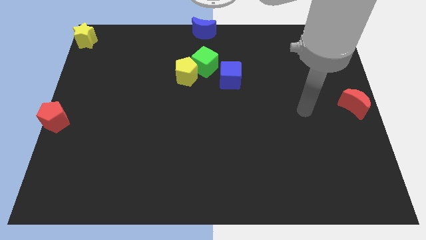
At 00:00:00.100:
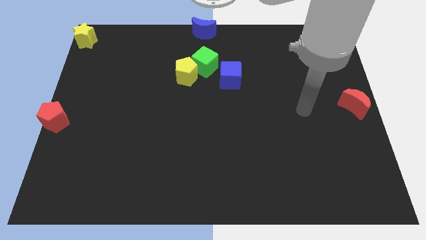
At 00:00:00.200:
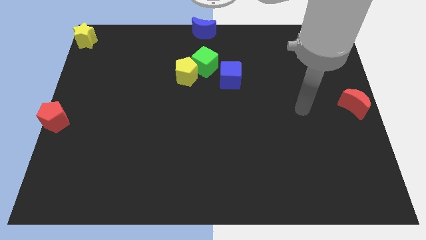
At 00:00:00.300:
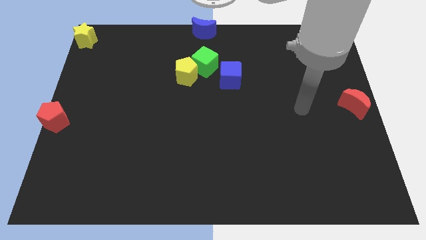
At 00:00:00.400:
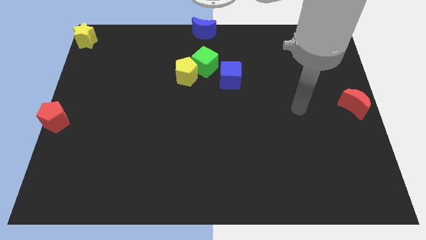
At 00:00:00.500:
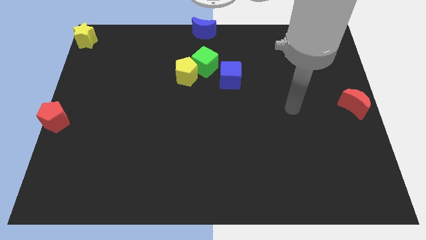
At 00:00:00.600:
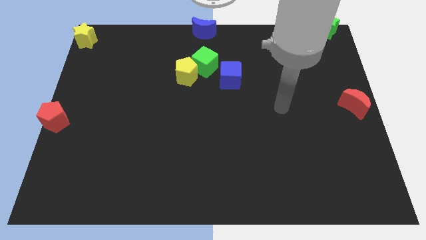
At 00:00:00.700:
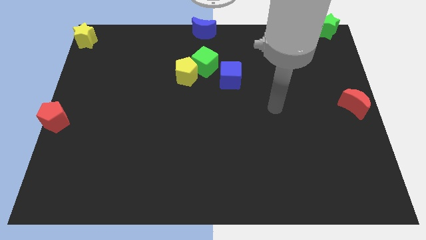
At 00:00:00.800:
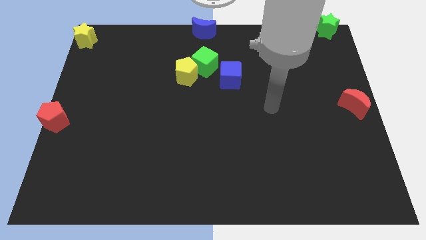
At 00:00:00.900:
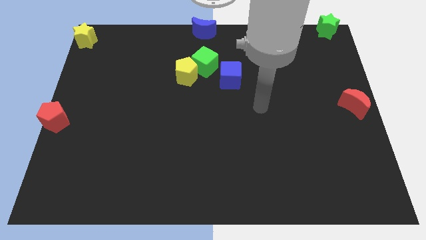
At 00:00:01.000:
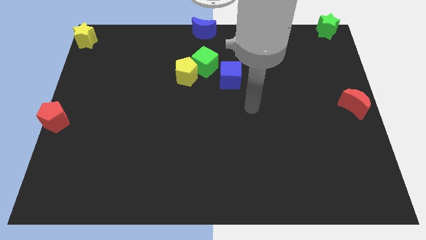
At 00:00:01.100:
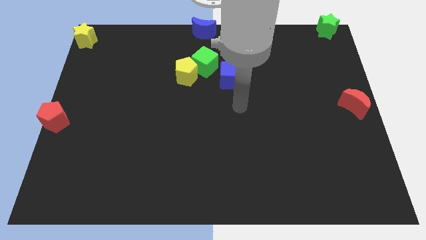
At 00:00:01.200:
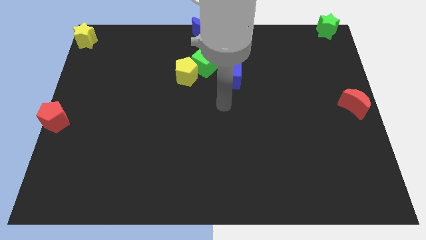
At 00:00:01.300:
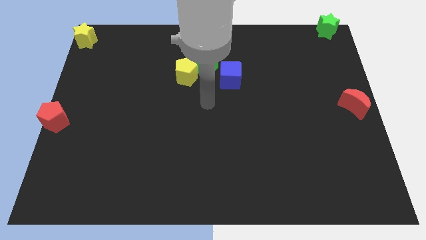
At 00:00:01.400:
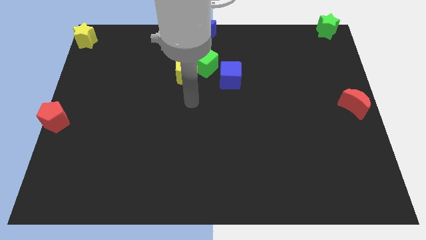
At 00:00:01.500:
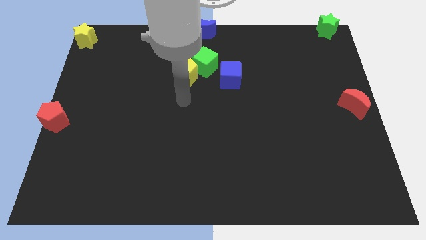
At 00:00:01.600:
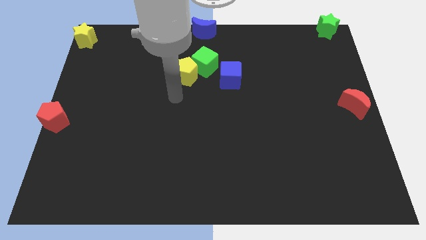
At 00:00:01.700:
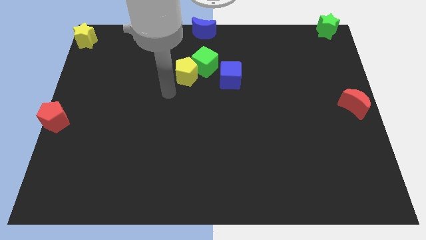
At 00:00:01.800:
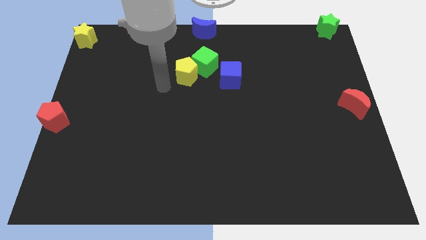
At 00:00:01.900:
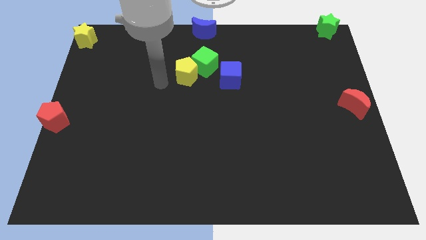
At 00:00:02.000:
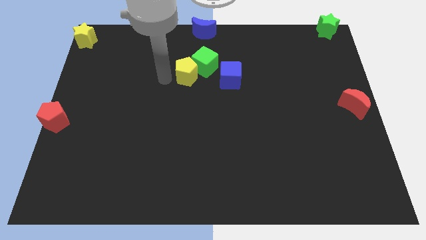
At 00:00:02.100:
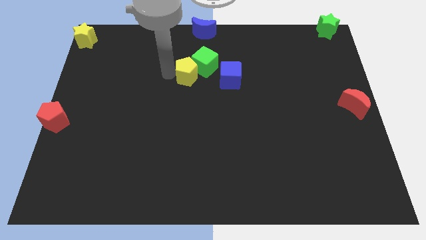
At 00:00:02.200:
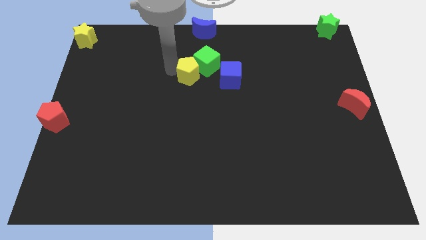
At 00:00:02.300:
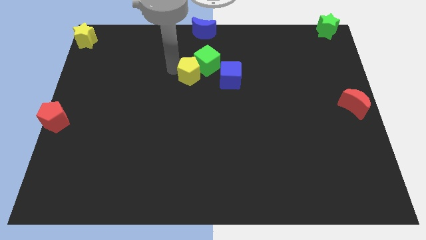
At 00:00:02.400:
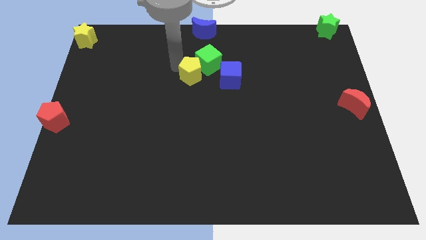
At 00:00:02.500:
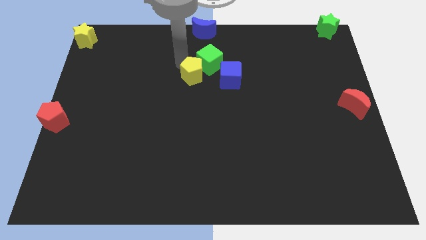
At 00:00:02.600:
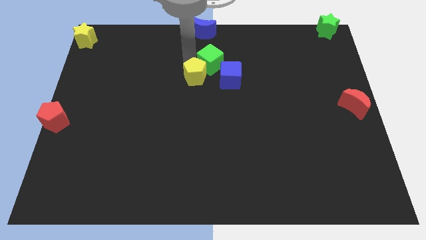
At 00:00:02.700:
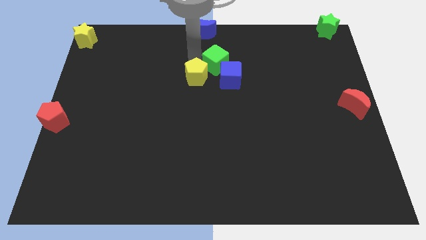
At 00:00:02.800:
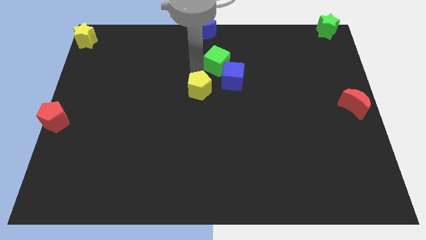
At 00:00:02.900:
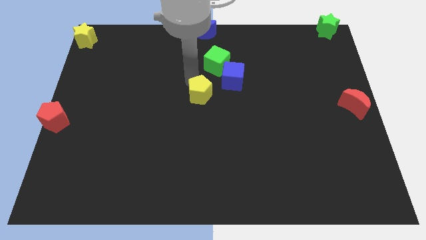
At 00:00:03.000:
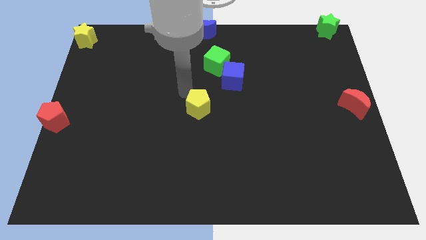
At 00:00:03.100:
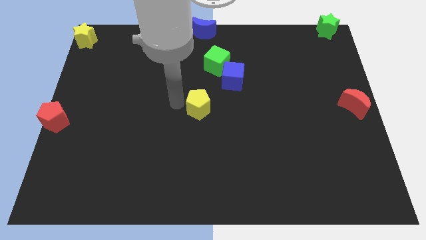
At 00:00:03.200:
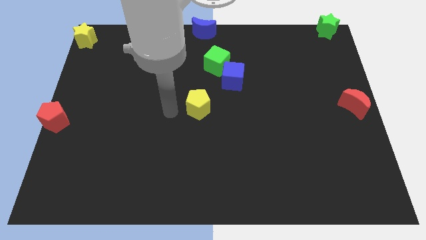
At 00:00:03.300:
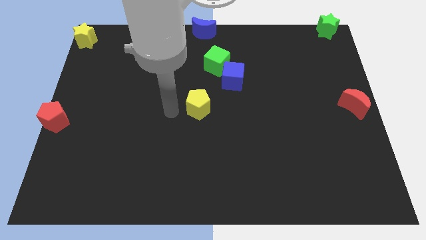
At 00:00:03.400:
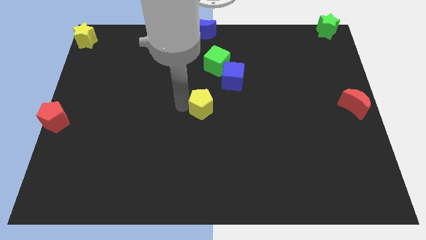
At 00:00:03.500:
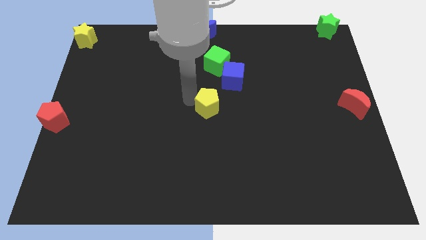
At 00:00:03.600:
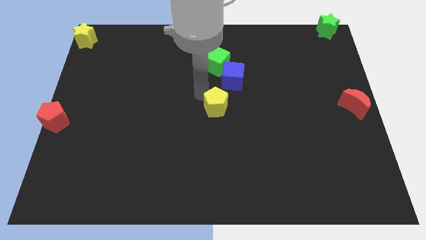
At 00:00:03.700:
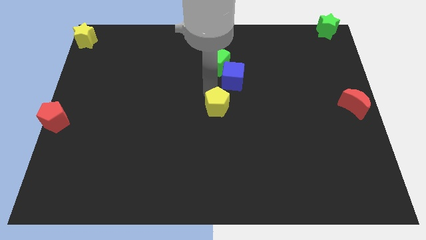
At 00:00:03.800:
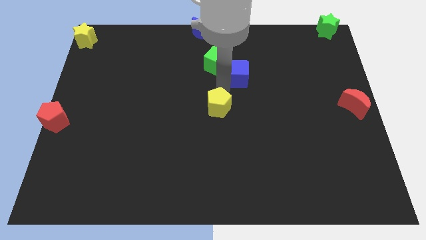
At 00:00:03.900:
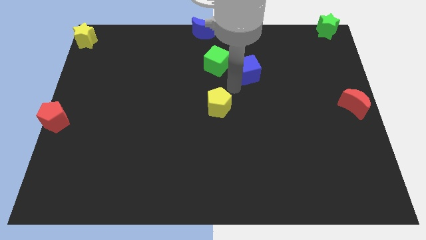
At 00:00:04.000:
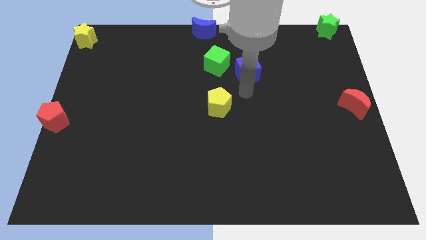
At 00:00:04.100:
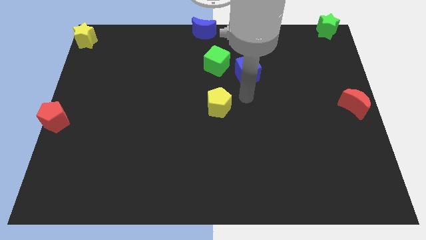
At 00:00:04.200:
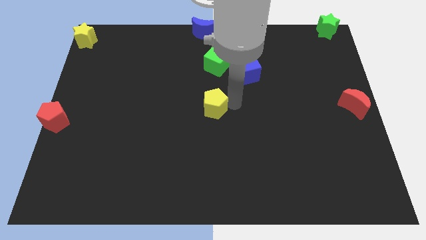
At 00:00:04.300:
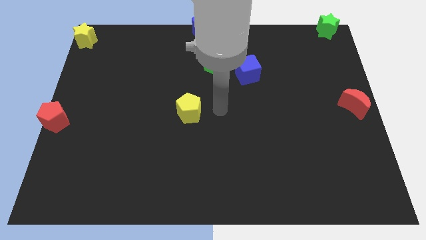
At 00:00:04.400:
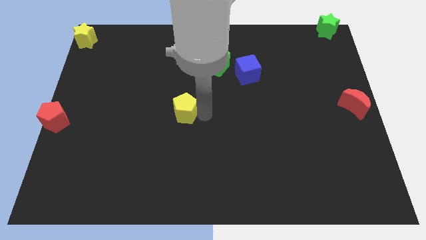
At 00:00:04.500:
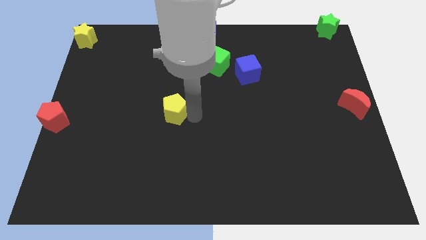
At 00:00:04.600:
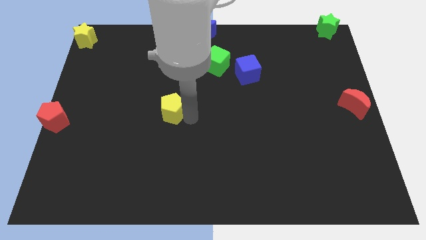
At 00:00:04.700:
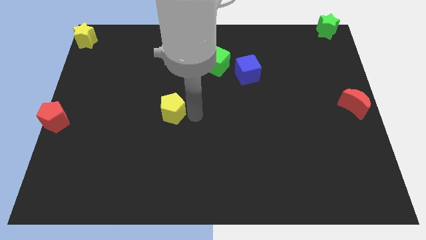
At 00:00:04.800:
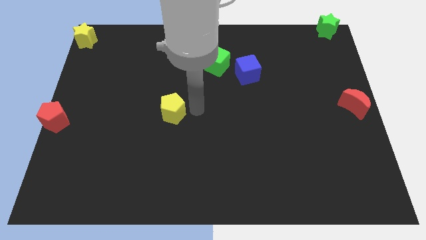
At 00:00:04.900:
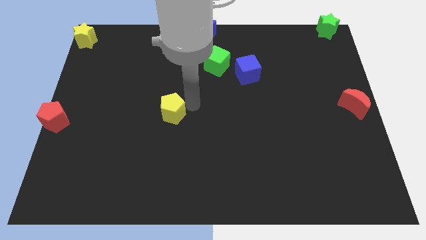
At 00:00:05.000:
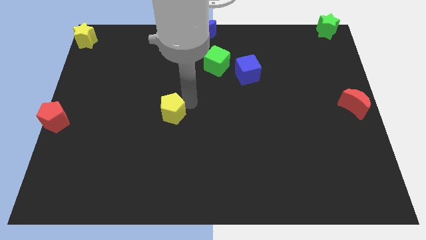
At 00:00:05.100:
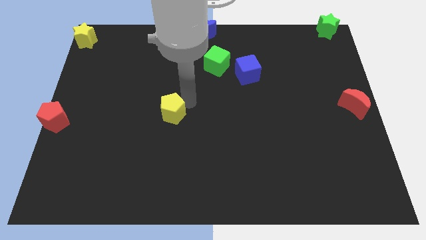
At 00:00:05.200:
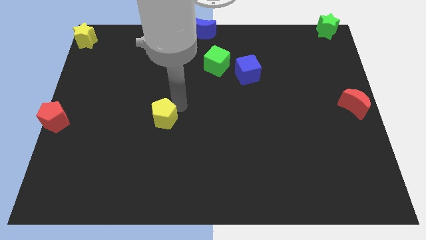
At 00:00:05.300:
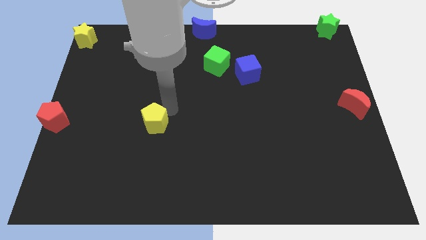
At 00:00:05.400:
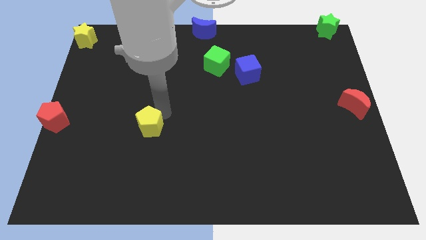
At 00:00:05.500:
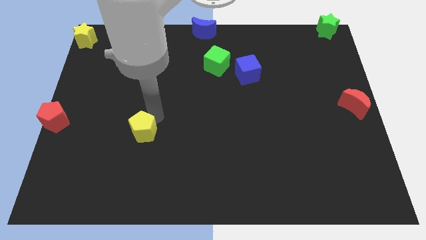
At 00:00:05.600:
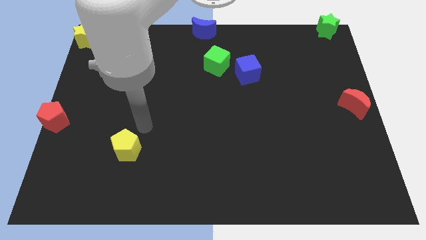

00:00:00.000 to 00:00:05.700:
drag the yellow pentagon diagonal to green cube

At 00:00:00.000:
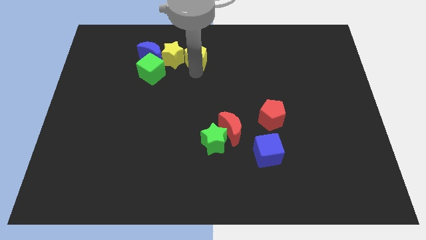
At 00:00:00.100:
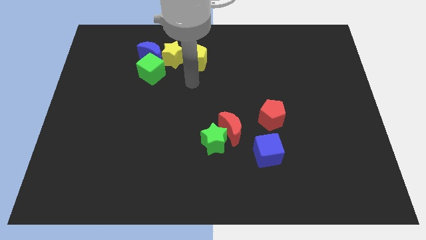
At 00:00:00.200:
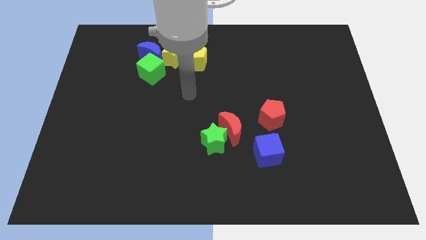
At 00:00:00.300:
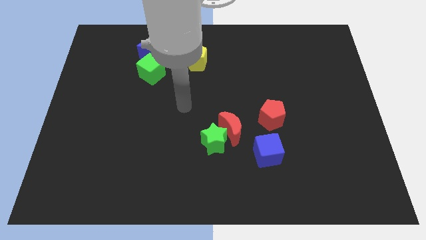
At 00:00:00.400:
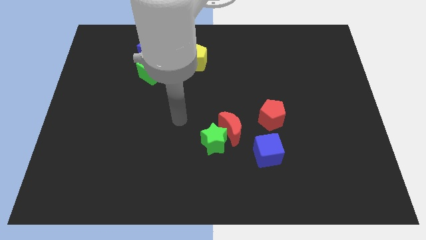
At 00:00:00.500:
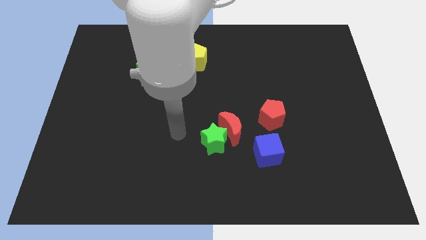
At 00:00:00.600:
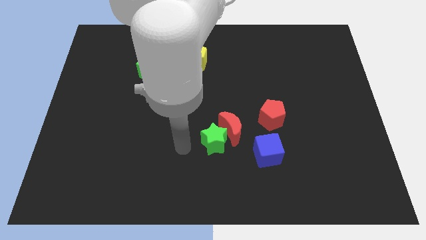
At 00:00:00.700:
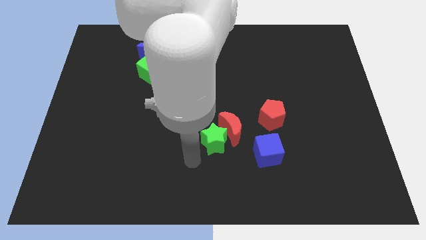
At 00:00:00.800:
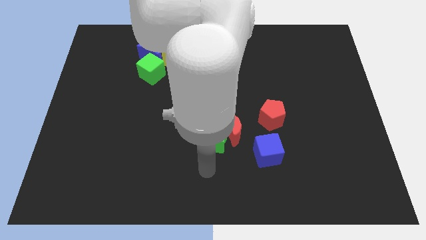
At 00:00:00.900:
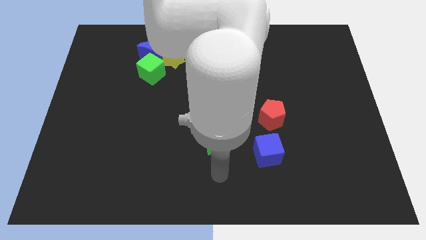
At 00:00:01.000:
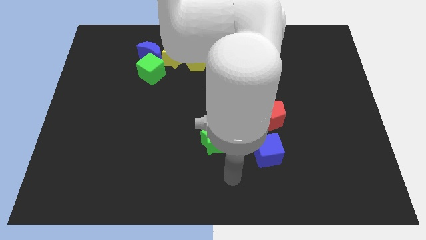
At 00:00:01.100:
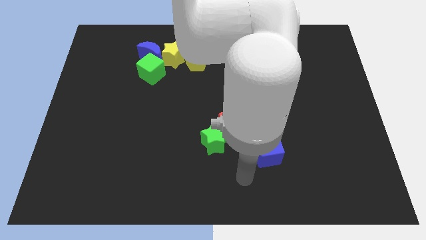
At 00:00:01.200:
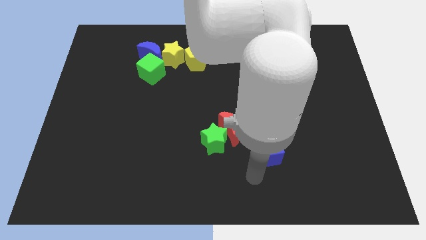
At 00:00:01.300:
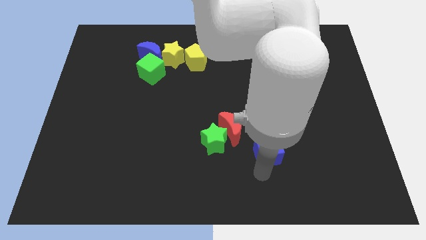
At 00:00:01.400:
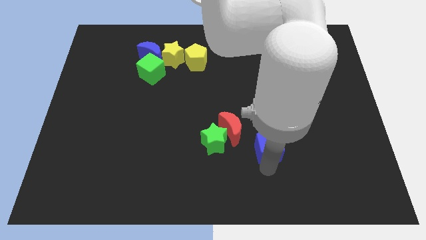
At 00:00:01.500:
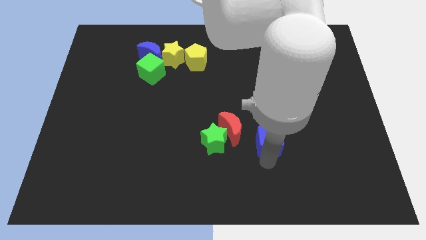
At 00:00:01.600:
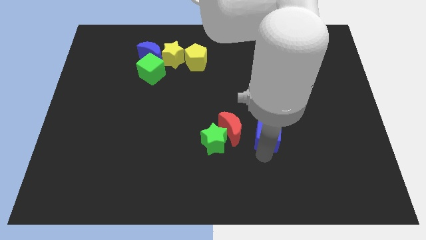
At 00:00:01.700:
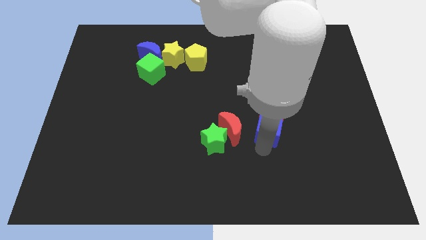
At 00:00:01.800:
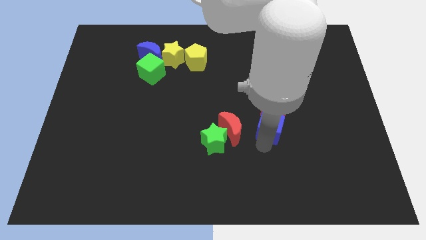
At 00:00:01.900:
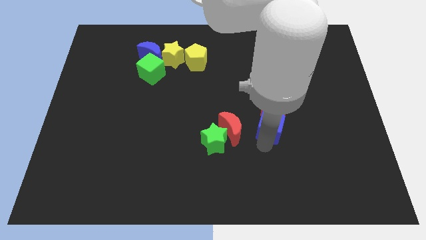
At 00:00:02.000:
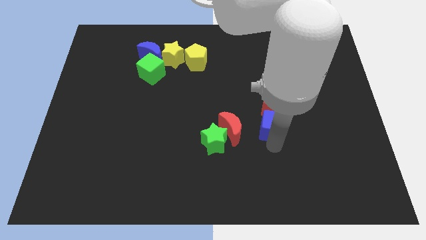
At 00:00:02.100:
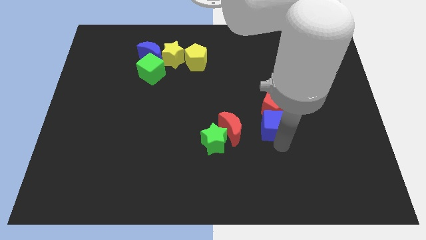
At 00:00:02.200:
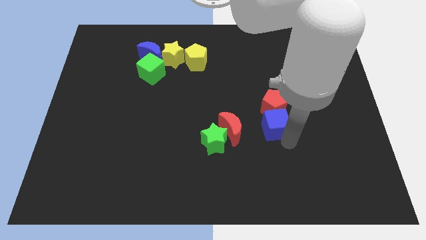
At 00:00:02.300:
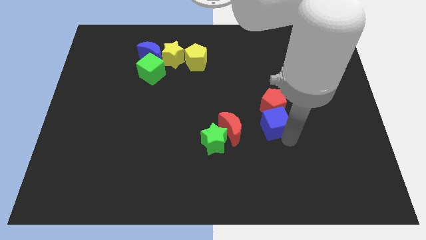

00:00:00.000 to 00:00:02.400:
move the blue cube to the bottom of the red pentagon

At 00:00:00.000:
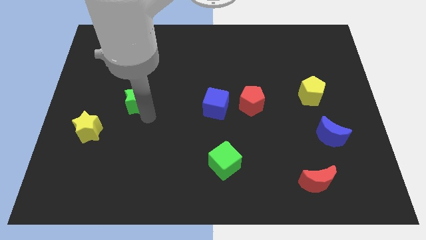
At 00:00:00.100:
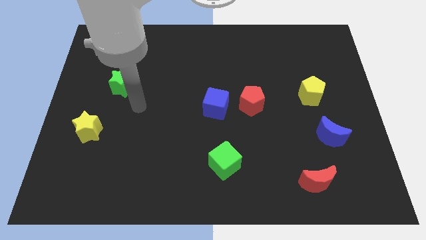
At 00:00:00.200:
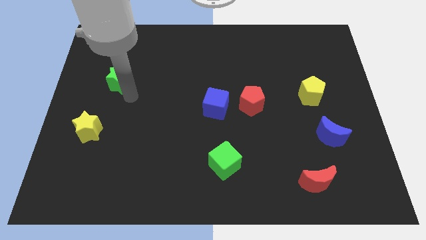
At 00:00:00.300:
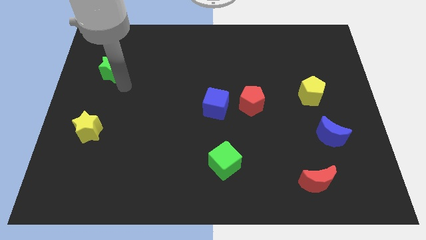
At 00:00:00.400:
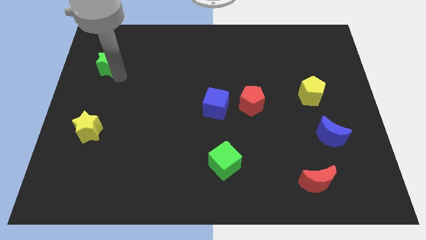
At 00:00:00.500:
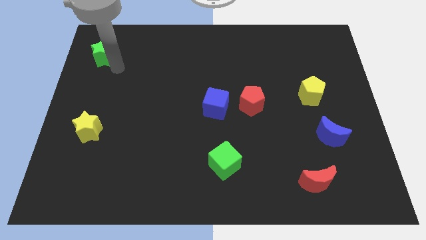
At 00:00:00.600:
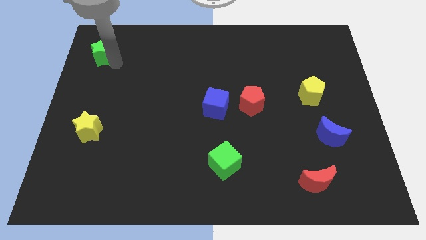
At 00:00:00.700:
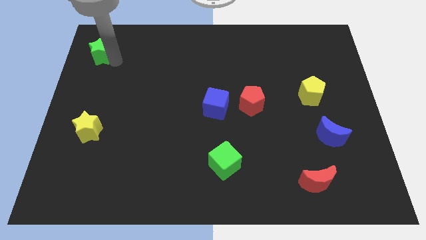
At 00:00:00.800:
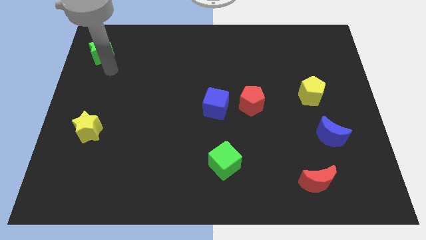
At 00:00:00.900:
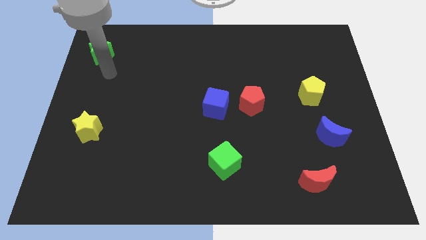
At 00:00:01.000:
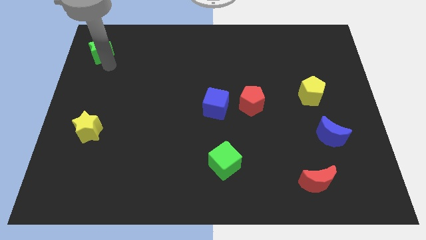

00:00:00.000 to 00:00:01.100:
place green star vertically above yellow star
